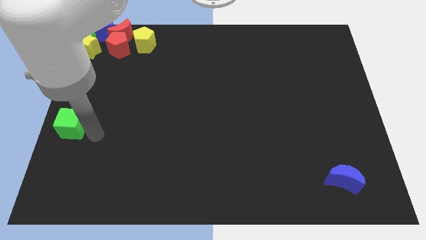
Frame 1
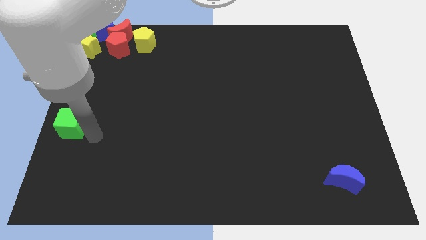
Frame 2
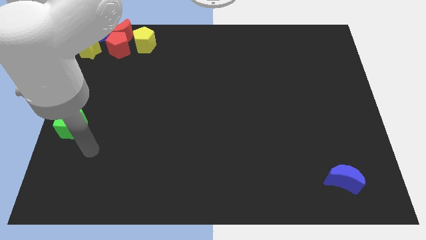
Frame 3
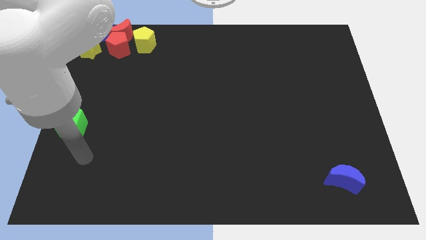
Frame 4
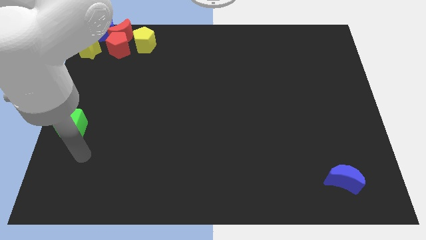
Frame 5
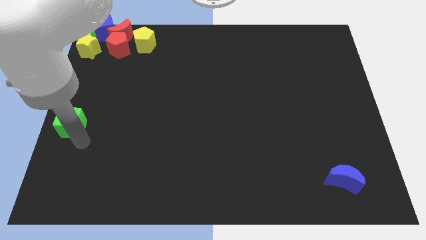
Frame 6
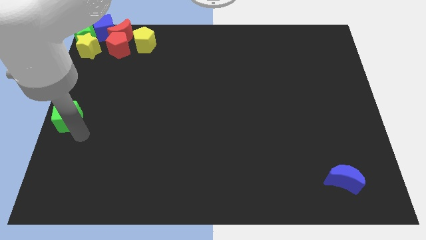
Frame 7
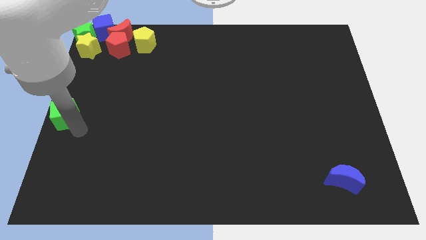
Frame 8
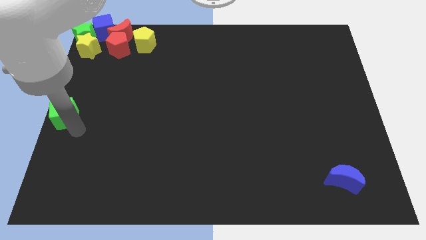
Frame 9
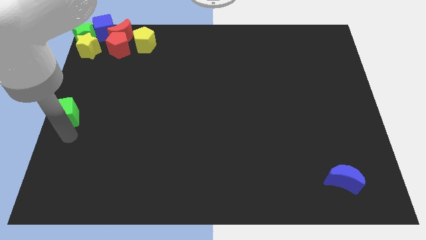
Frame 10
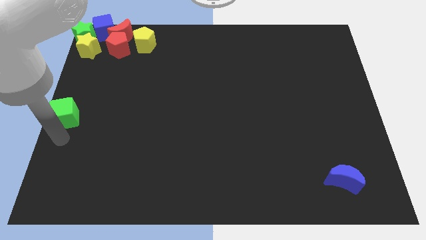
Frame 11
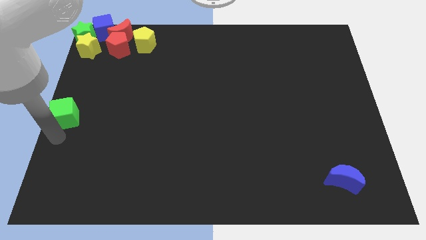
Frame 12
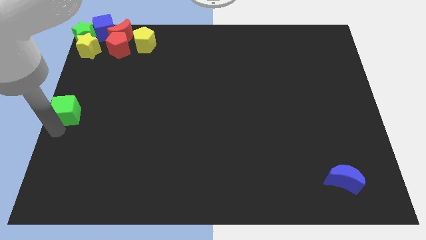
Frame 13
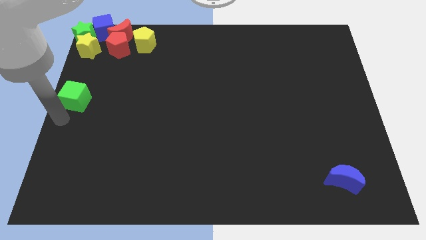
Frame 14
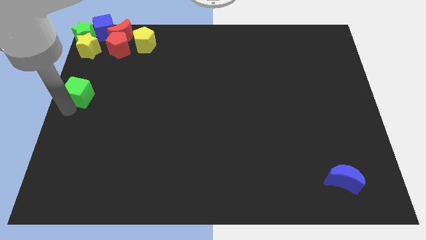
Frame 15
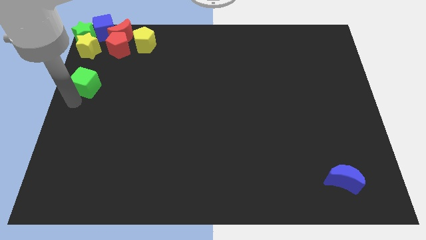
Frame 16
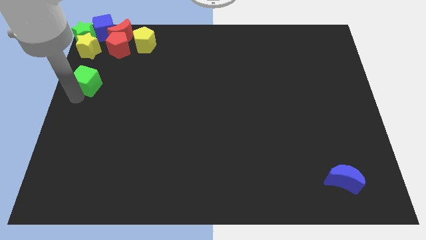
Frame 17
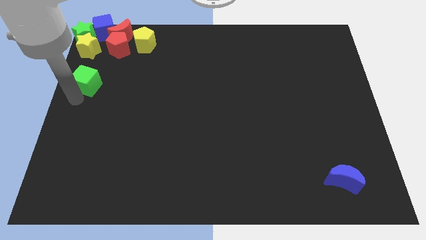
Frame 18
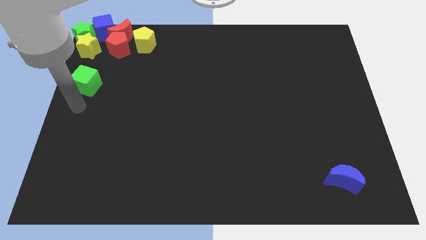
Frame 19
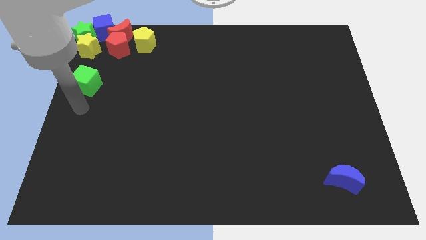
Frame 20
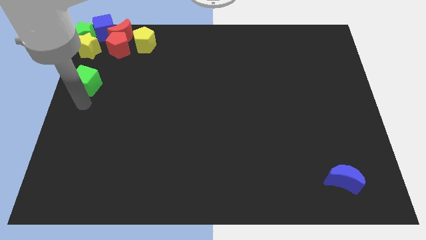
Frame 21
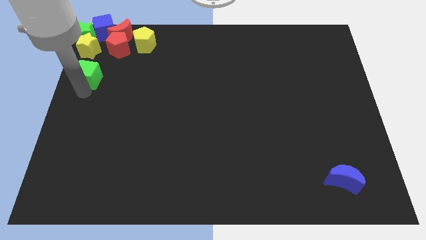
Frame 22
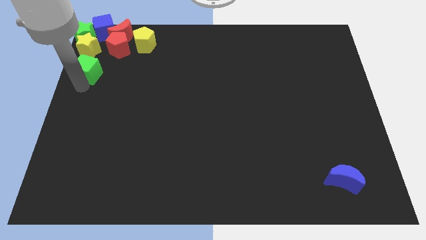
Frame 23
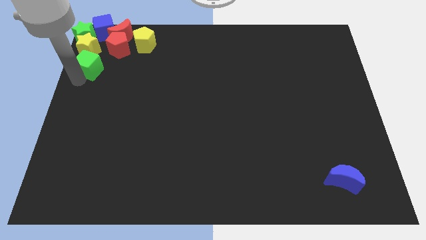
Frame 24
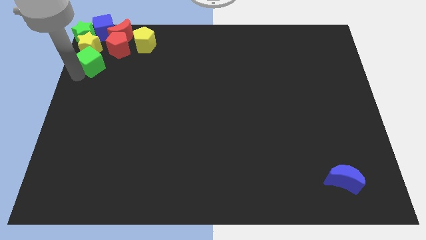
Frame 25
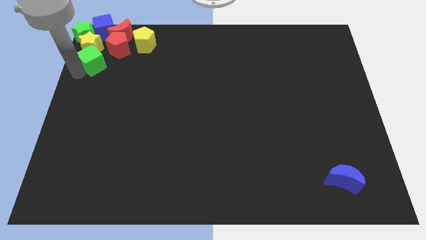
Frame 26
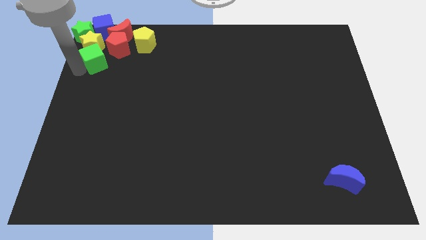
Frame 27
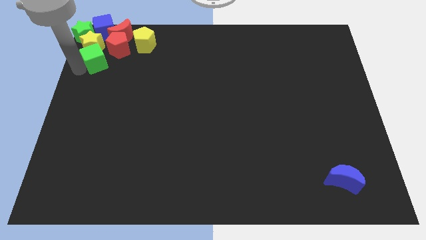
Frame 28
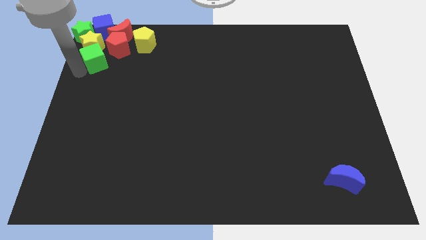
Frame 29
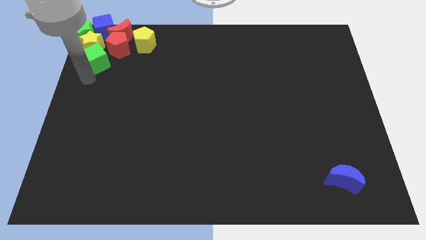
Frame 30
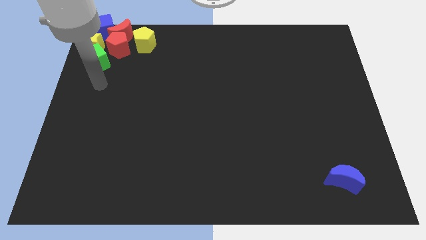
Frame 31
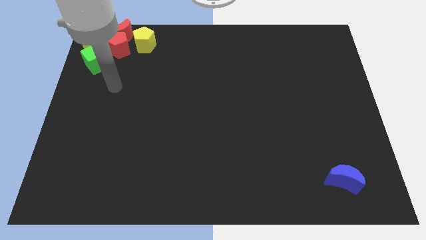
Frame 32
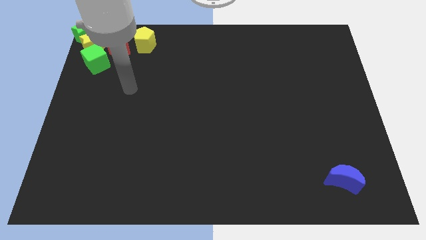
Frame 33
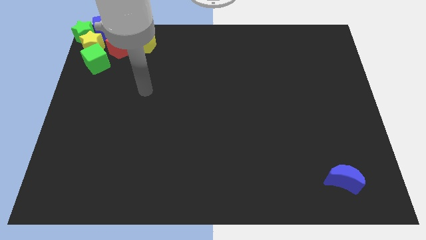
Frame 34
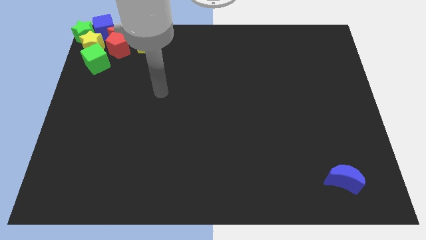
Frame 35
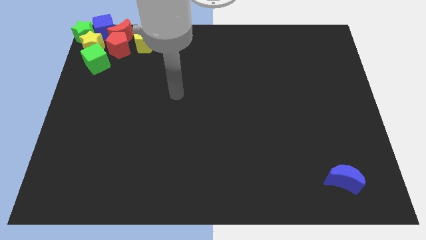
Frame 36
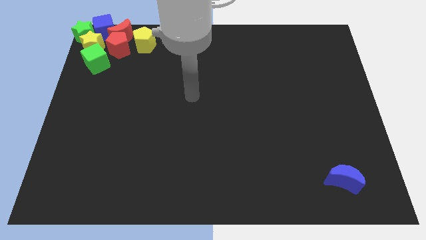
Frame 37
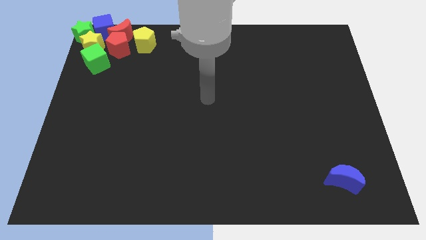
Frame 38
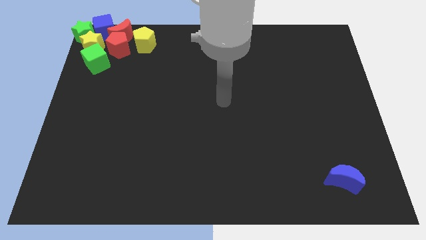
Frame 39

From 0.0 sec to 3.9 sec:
move the green cube to the bottom of the yellow star

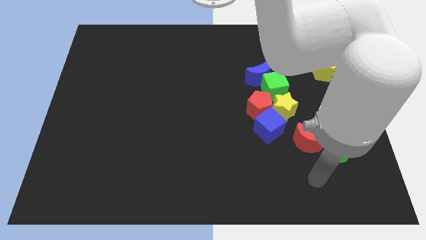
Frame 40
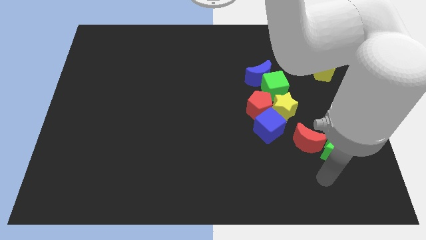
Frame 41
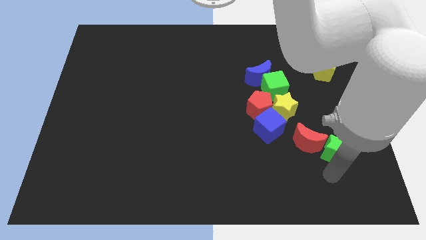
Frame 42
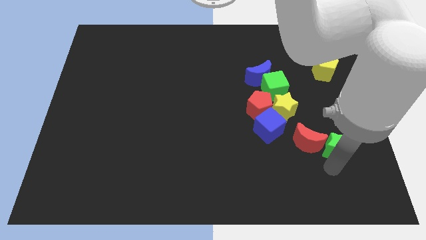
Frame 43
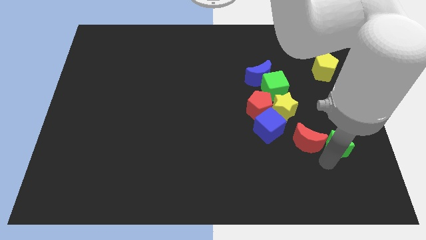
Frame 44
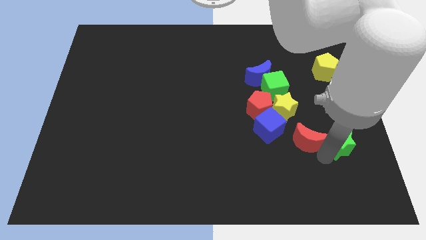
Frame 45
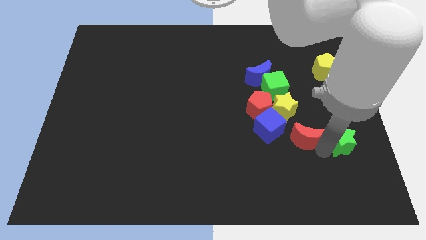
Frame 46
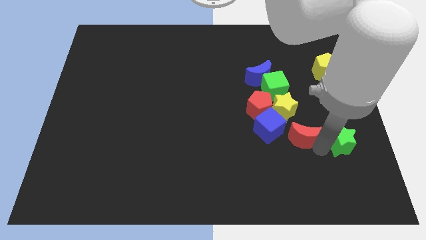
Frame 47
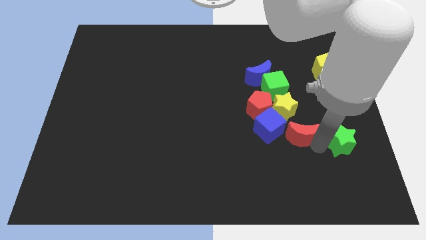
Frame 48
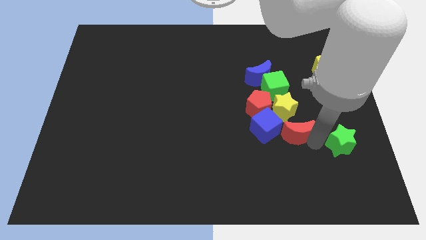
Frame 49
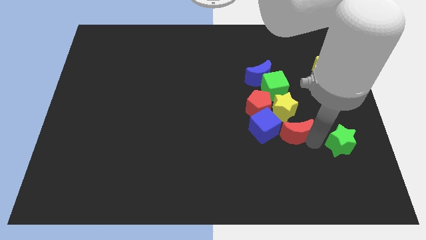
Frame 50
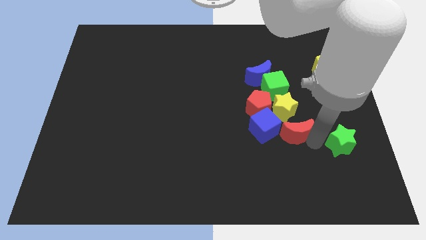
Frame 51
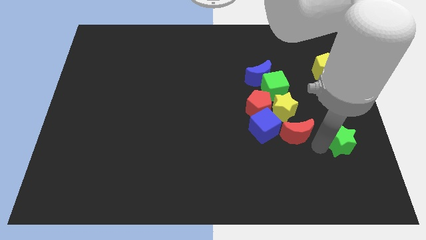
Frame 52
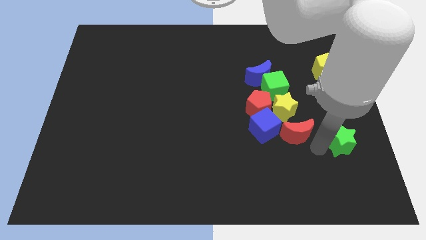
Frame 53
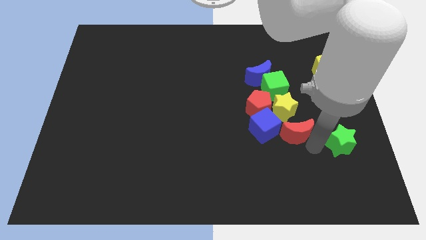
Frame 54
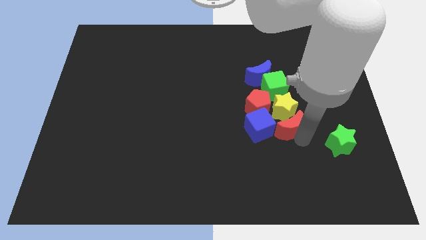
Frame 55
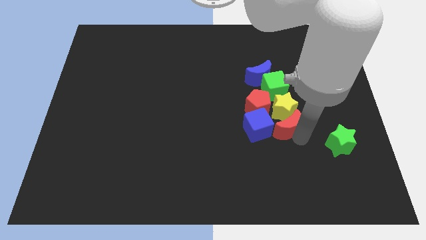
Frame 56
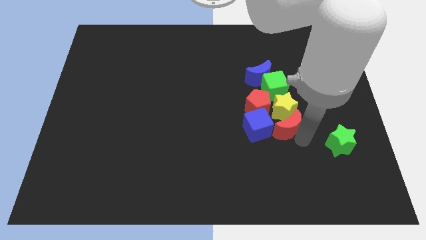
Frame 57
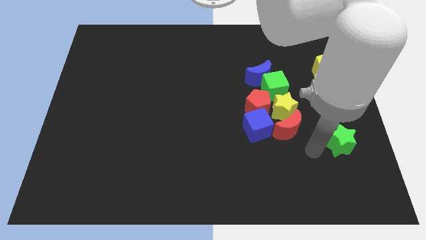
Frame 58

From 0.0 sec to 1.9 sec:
separate the red moon from the green star

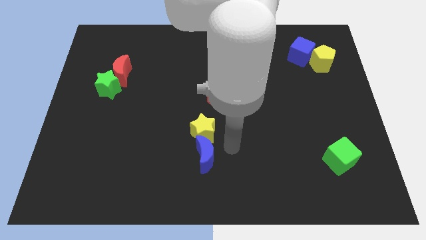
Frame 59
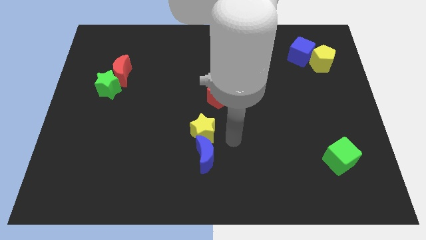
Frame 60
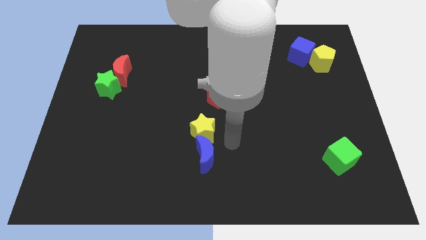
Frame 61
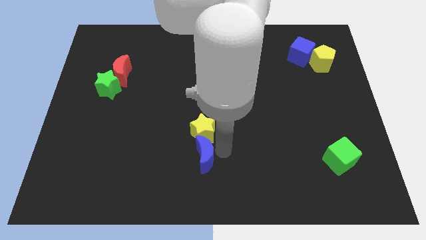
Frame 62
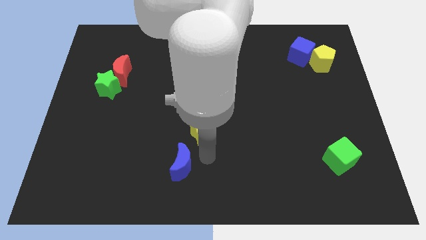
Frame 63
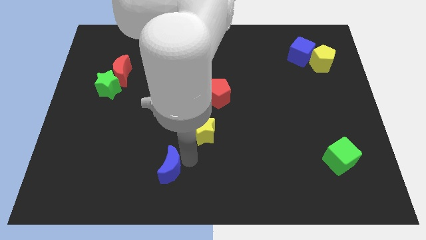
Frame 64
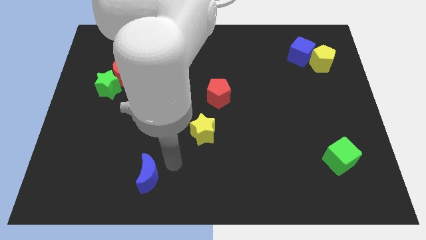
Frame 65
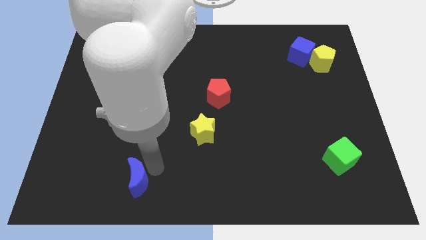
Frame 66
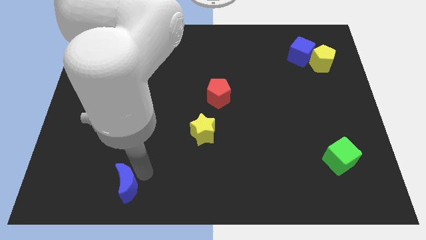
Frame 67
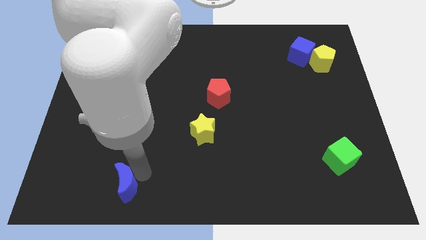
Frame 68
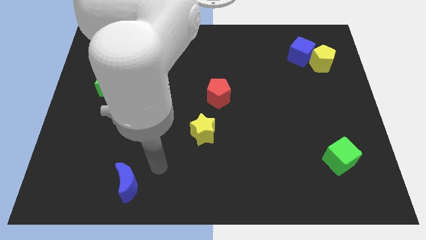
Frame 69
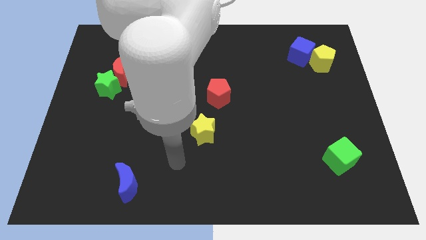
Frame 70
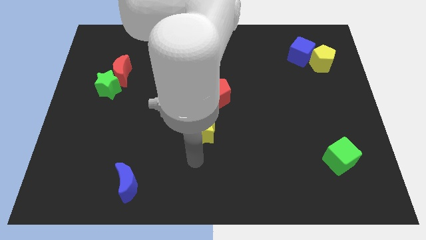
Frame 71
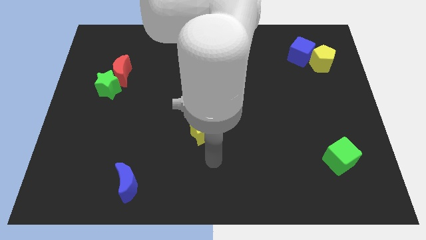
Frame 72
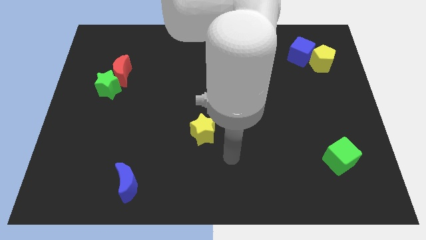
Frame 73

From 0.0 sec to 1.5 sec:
move blue moon away from the yellow star

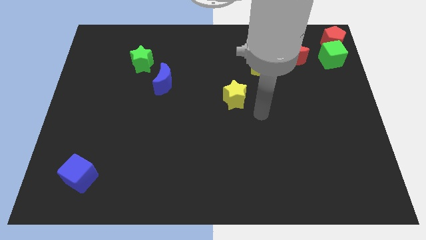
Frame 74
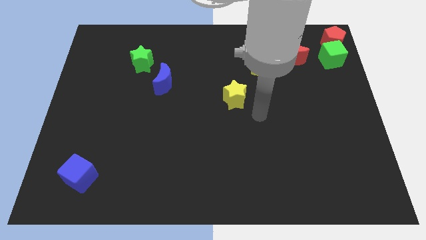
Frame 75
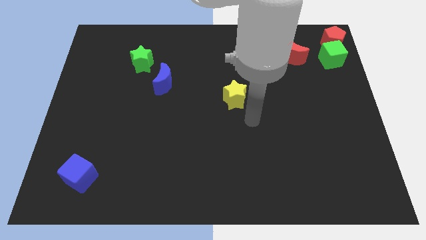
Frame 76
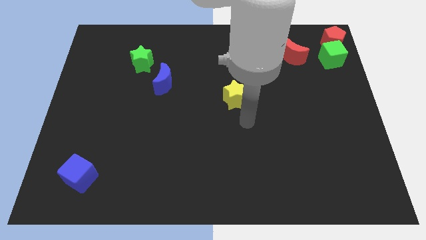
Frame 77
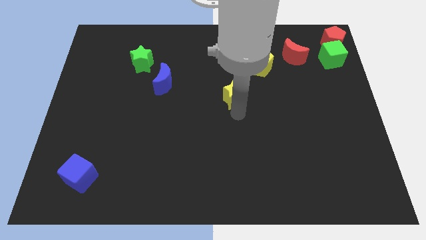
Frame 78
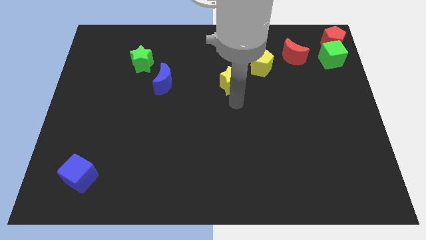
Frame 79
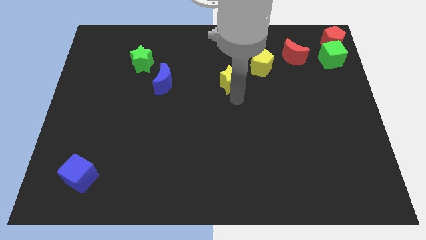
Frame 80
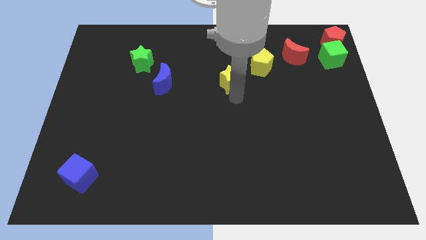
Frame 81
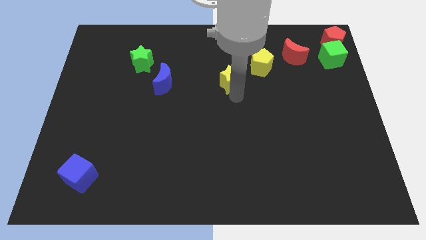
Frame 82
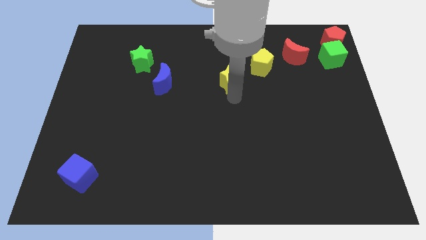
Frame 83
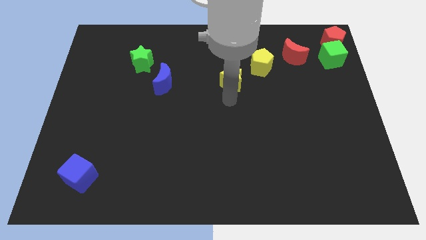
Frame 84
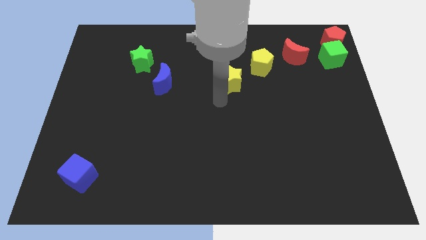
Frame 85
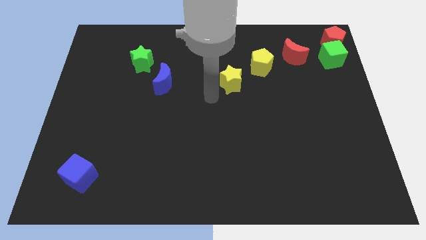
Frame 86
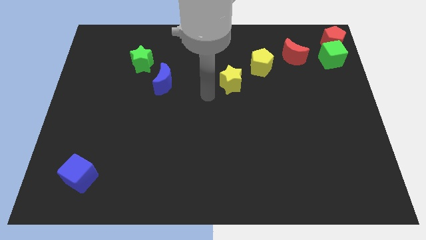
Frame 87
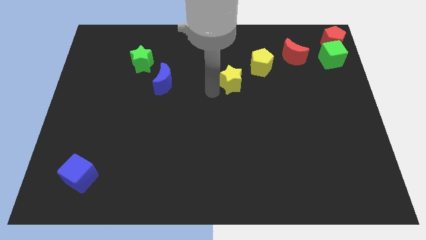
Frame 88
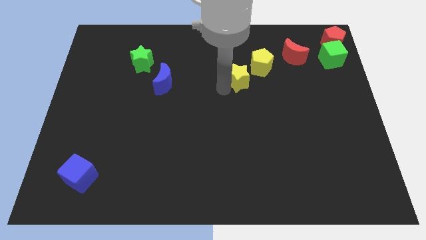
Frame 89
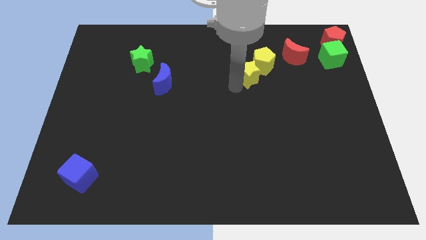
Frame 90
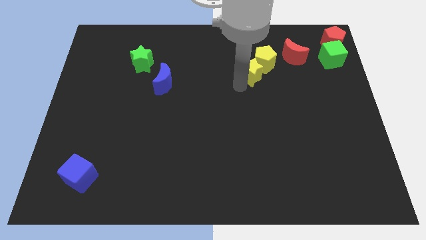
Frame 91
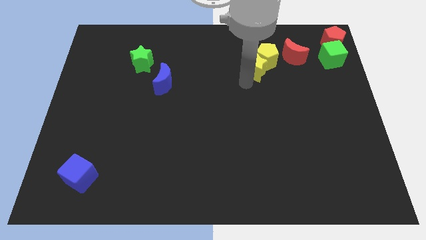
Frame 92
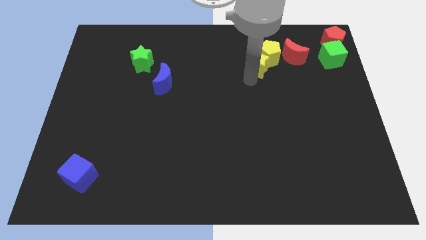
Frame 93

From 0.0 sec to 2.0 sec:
place the yellow star into the yellow pentagon
